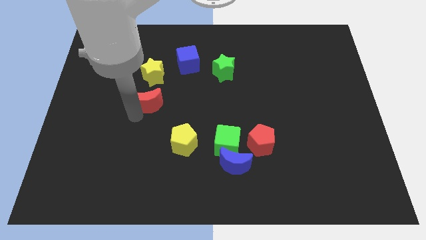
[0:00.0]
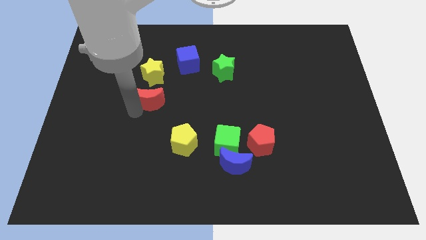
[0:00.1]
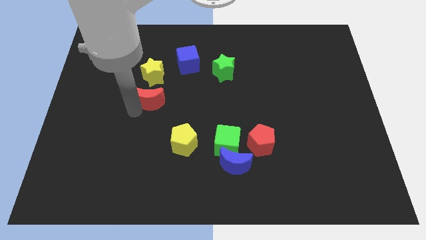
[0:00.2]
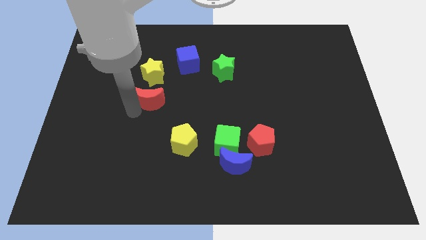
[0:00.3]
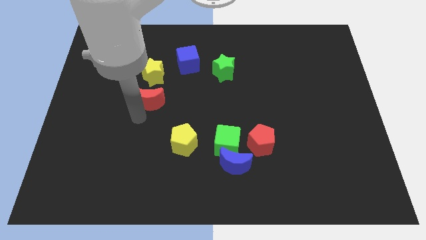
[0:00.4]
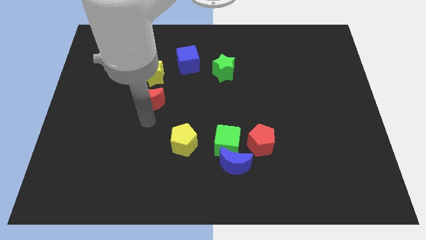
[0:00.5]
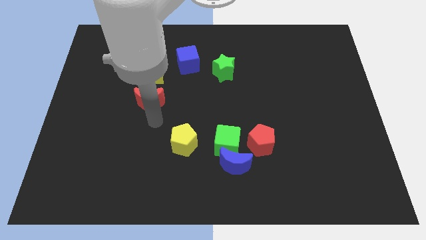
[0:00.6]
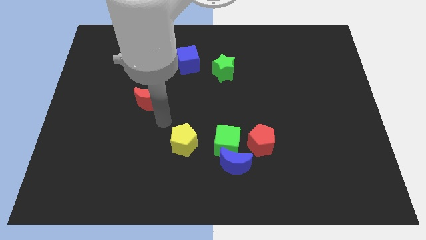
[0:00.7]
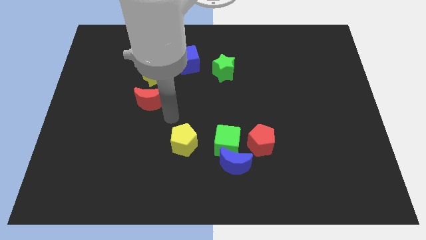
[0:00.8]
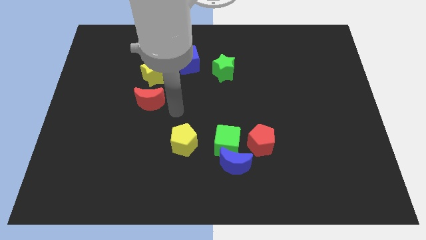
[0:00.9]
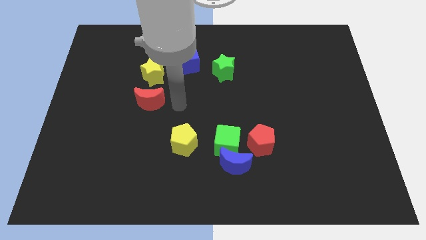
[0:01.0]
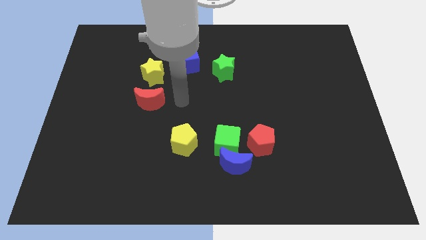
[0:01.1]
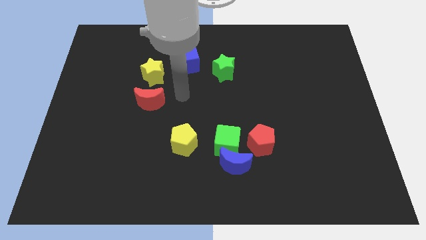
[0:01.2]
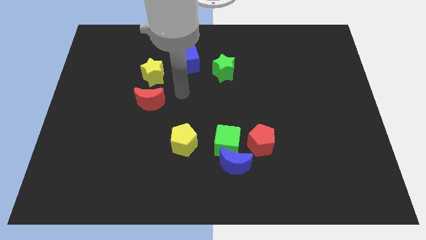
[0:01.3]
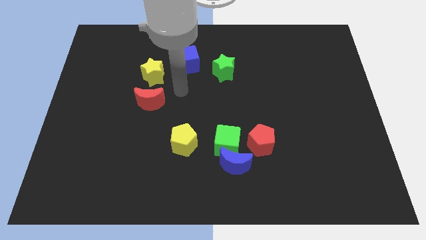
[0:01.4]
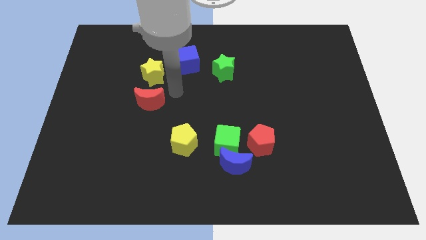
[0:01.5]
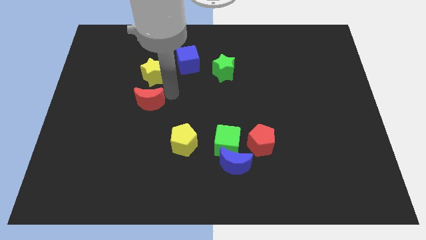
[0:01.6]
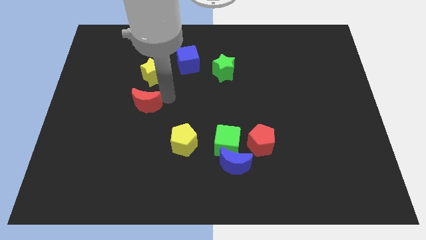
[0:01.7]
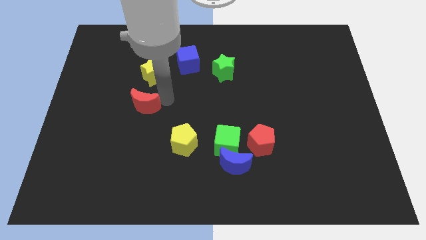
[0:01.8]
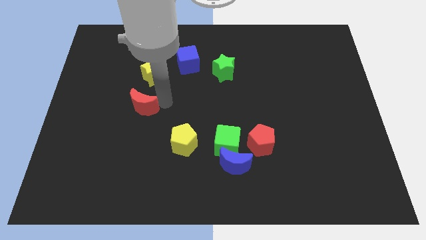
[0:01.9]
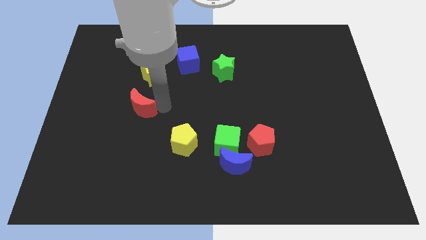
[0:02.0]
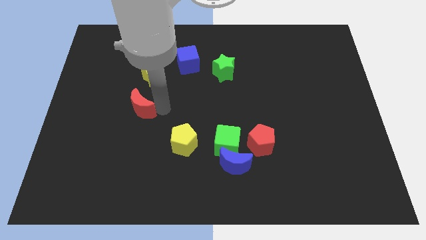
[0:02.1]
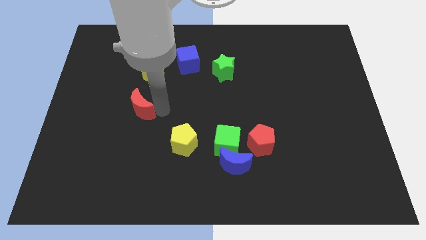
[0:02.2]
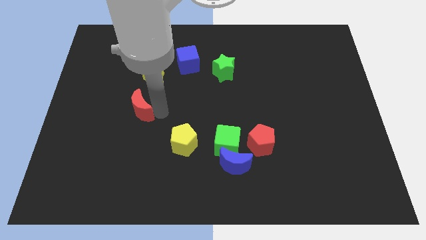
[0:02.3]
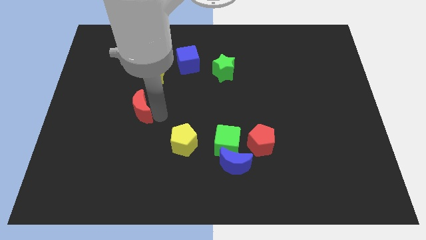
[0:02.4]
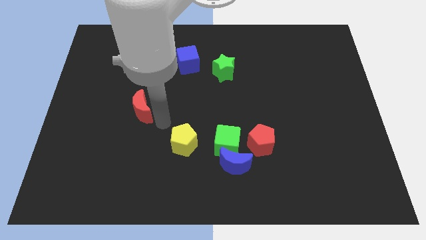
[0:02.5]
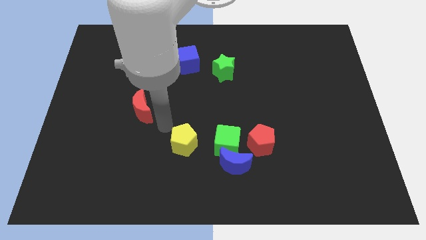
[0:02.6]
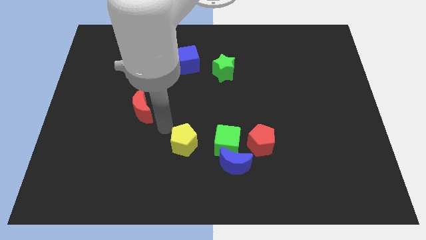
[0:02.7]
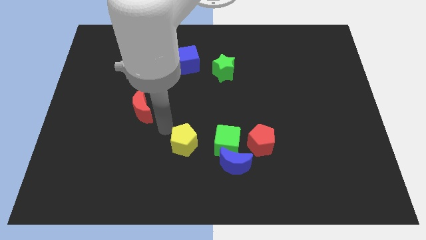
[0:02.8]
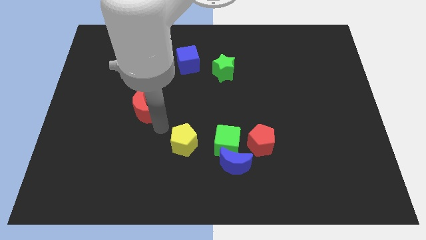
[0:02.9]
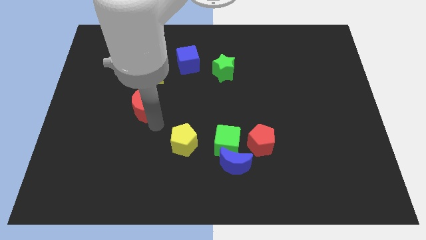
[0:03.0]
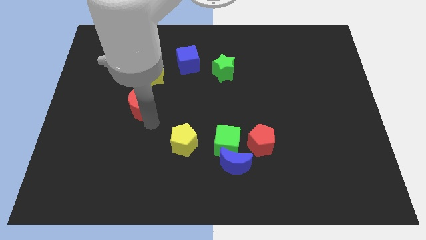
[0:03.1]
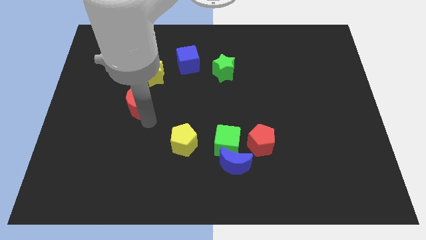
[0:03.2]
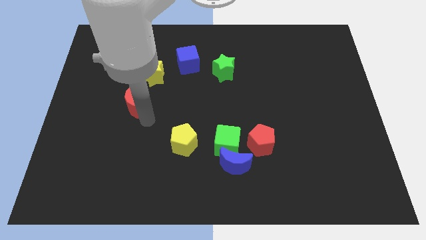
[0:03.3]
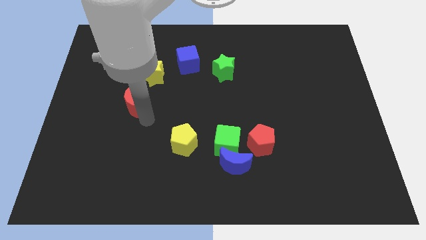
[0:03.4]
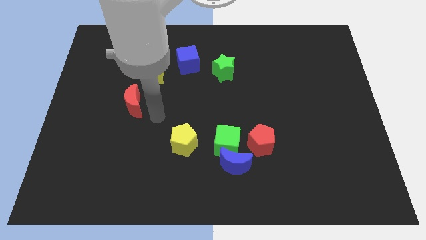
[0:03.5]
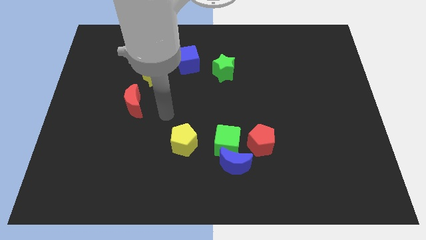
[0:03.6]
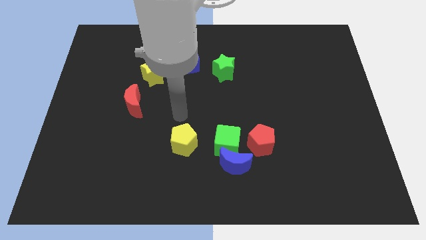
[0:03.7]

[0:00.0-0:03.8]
move the red moon vertically below yellow star

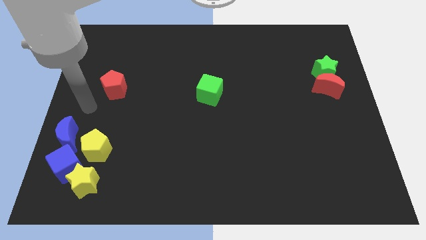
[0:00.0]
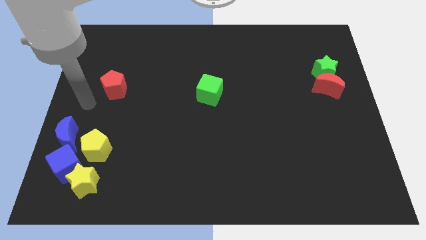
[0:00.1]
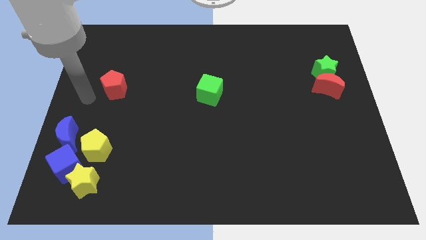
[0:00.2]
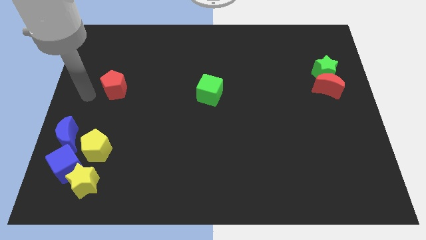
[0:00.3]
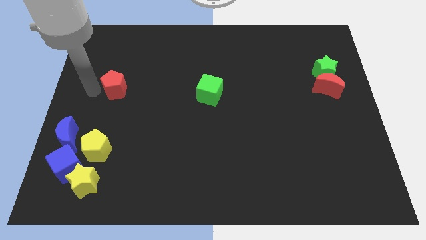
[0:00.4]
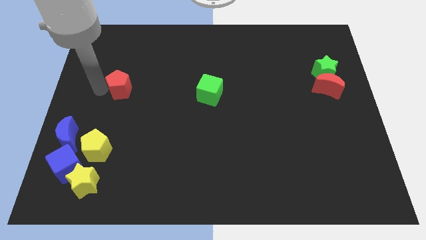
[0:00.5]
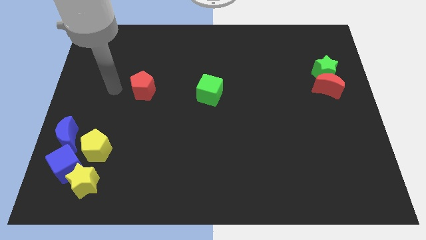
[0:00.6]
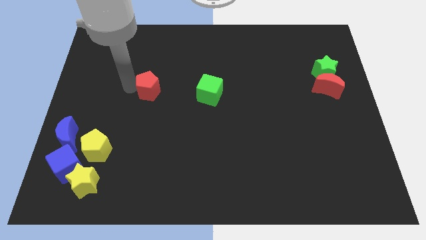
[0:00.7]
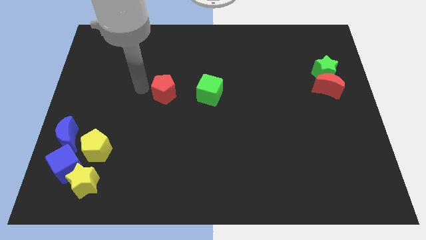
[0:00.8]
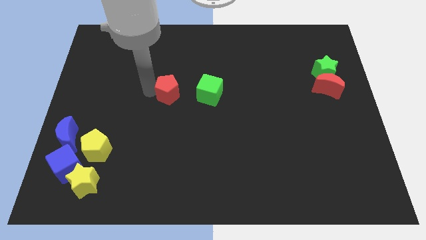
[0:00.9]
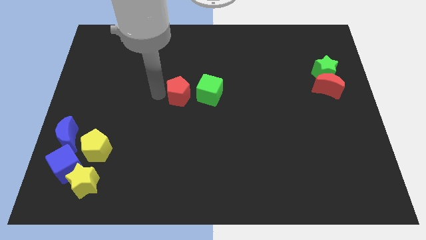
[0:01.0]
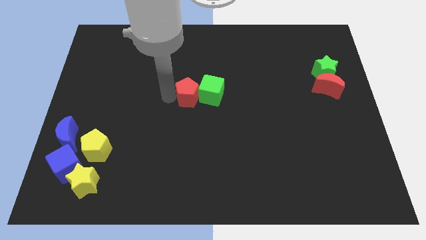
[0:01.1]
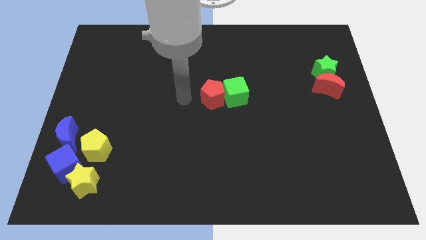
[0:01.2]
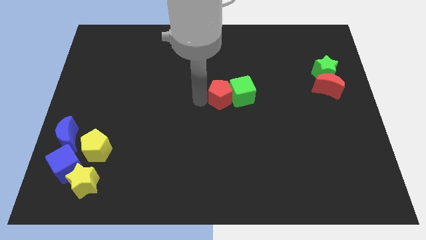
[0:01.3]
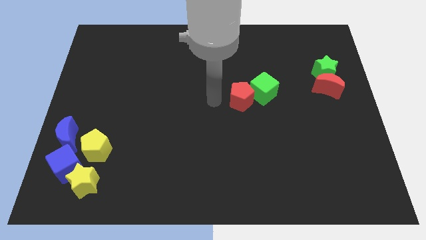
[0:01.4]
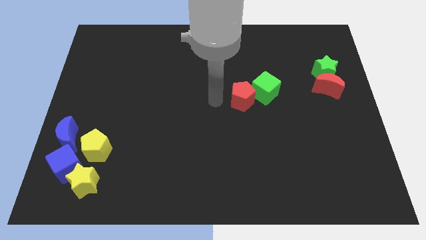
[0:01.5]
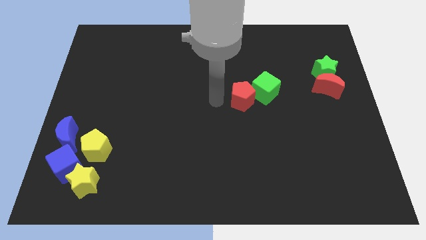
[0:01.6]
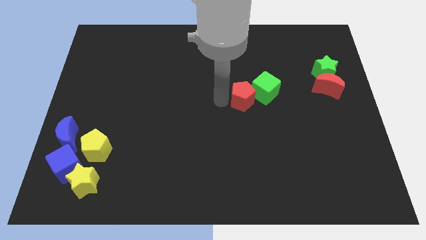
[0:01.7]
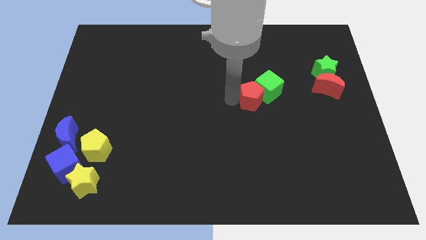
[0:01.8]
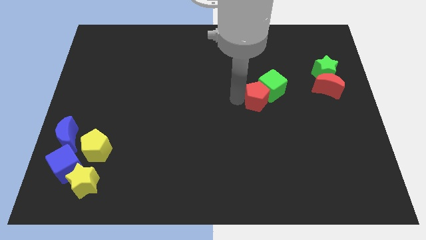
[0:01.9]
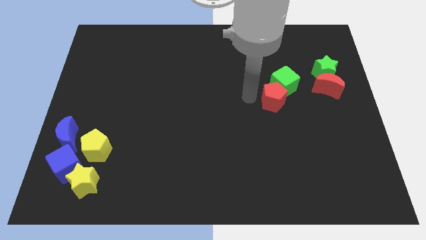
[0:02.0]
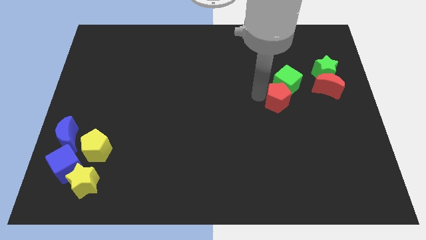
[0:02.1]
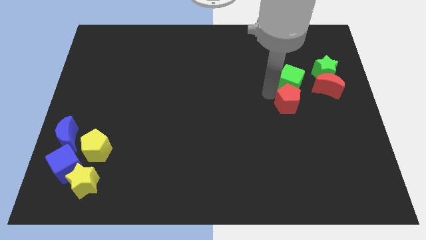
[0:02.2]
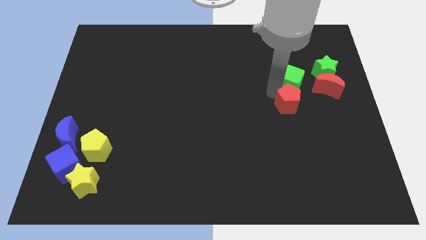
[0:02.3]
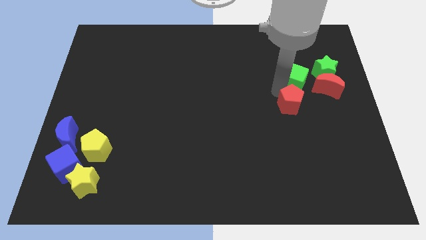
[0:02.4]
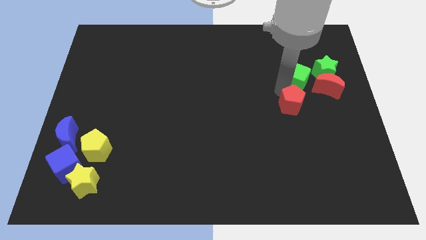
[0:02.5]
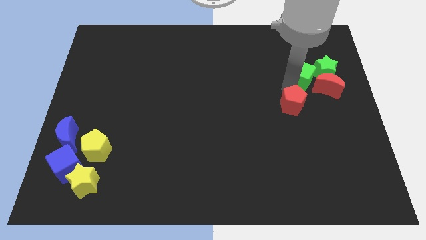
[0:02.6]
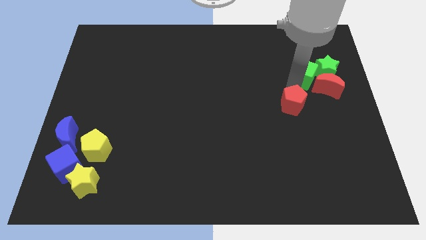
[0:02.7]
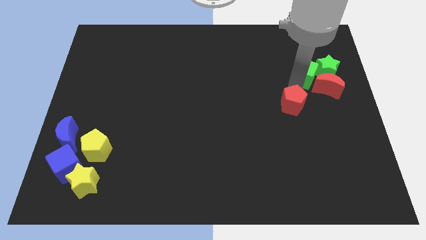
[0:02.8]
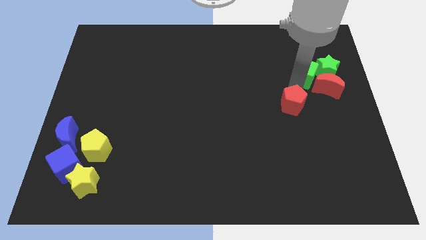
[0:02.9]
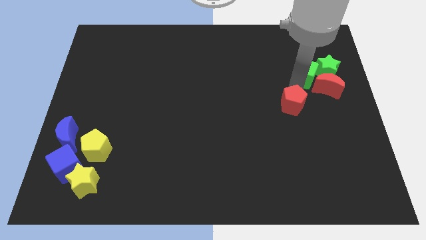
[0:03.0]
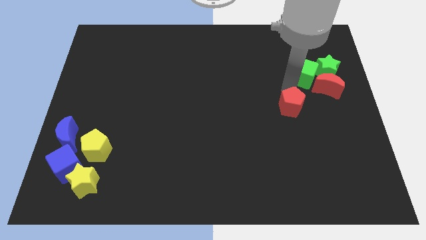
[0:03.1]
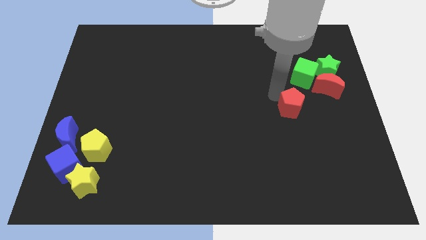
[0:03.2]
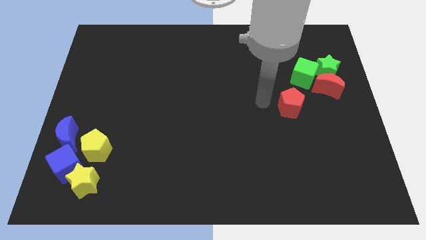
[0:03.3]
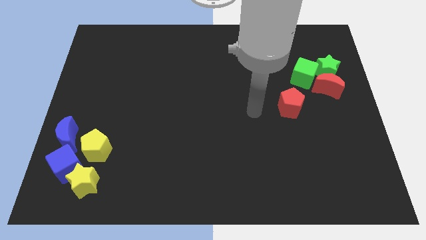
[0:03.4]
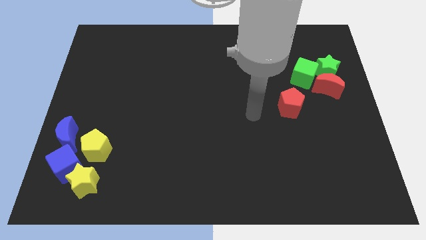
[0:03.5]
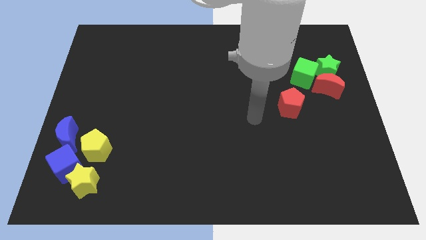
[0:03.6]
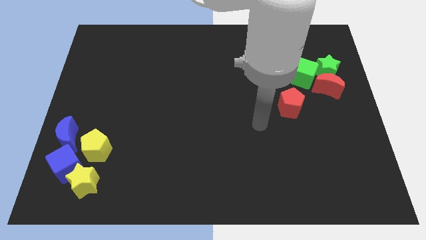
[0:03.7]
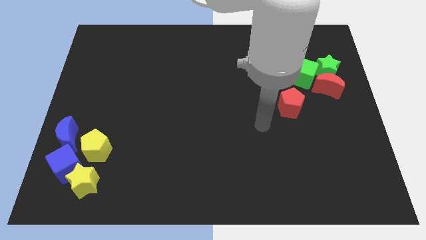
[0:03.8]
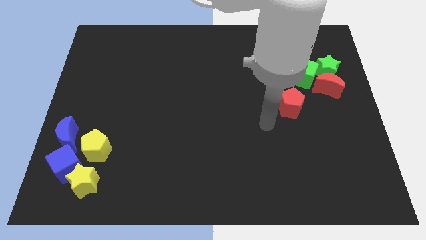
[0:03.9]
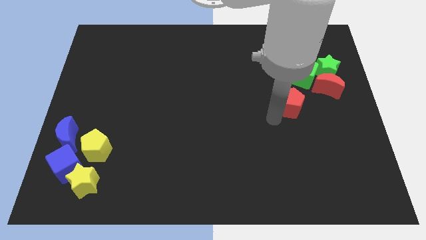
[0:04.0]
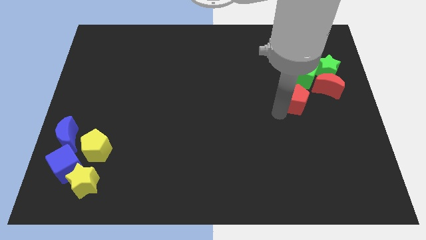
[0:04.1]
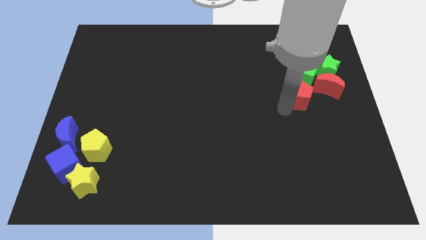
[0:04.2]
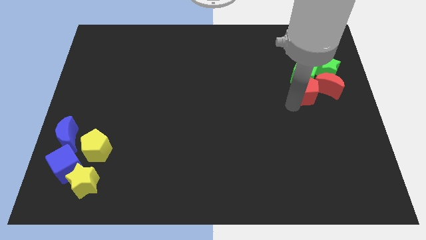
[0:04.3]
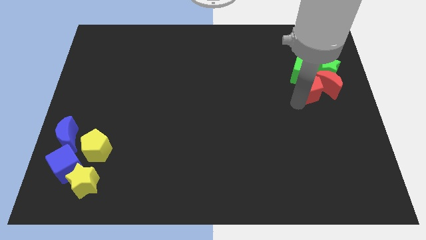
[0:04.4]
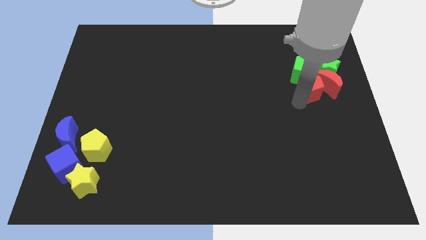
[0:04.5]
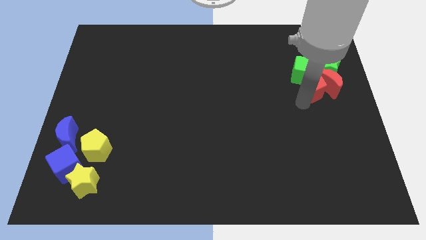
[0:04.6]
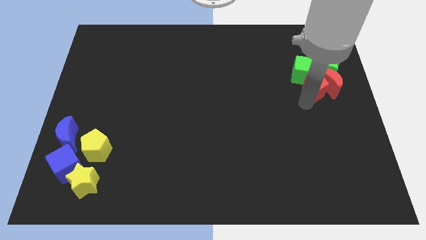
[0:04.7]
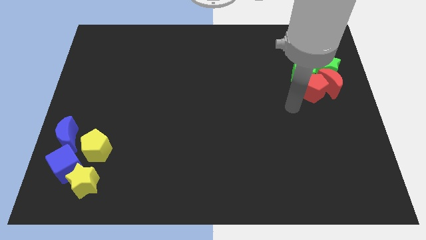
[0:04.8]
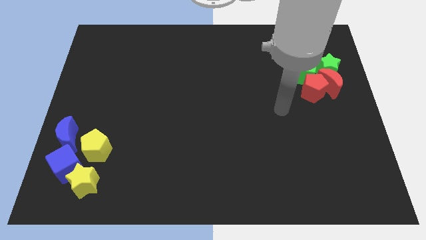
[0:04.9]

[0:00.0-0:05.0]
move the green cube and red pentagon left beside the green star and red red moon
